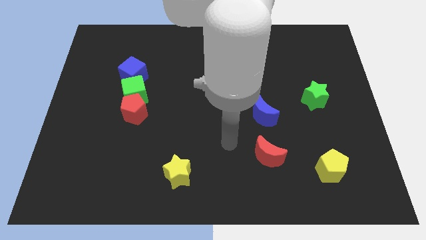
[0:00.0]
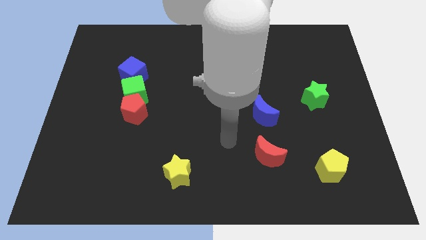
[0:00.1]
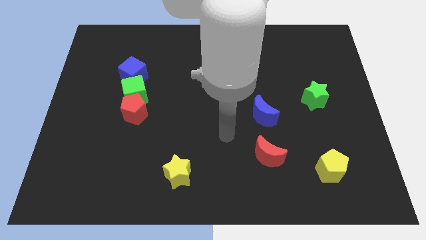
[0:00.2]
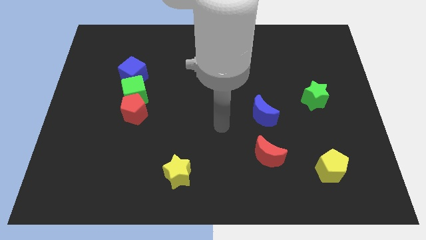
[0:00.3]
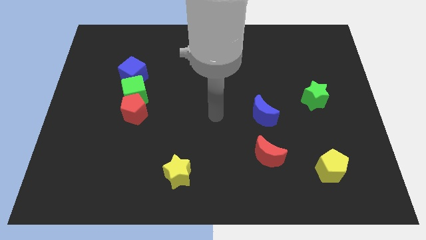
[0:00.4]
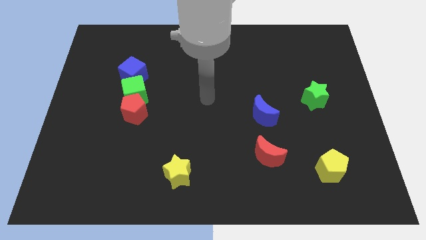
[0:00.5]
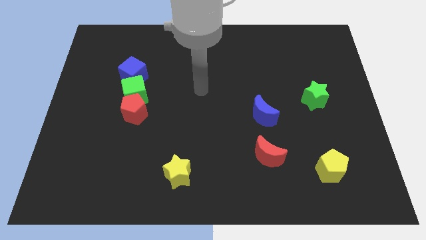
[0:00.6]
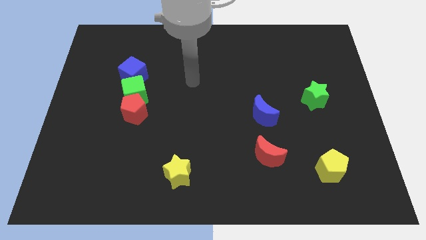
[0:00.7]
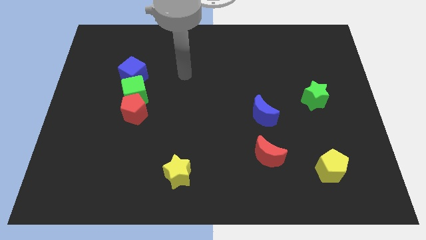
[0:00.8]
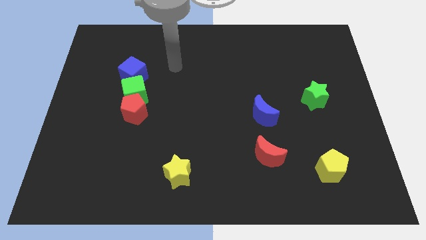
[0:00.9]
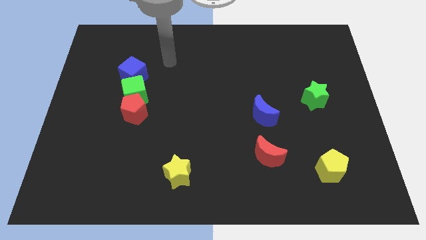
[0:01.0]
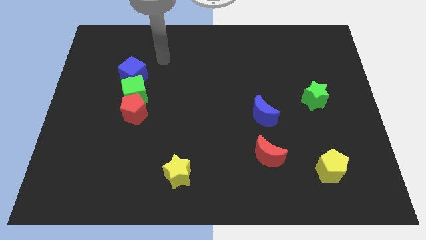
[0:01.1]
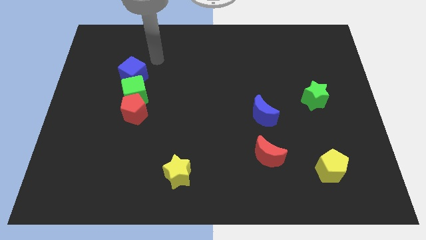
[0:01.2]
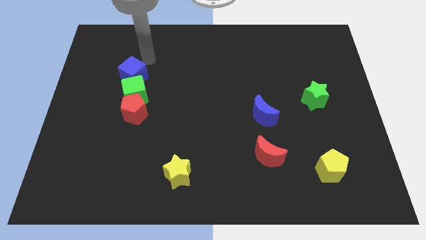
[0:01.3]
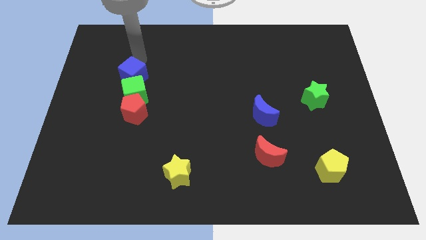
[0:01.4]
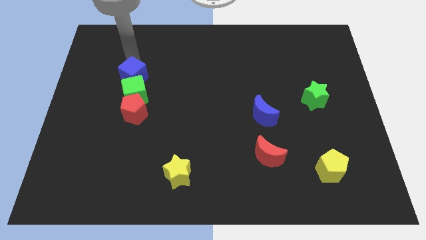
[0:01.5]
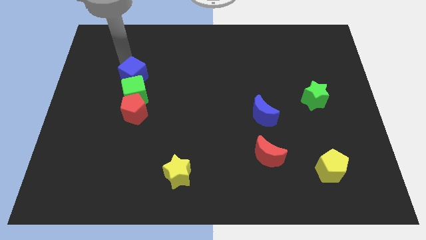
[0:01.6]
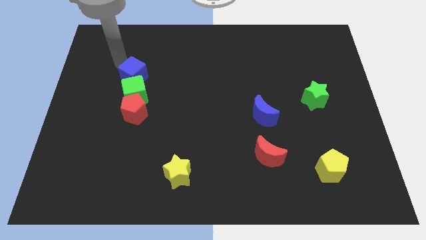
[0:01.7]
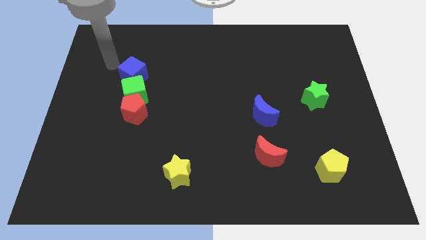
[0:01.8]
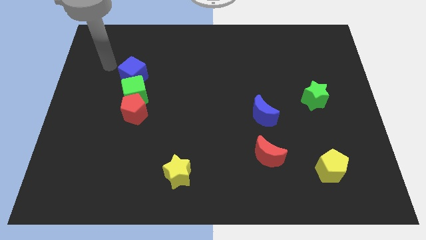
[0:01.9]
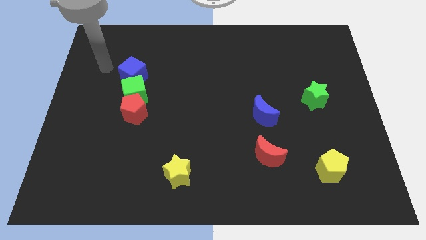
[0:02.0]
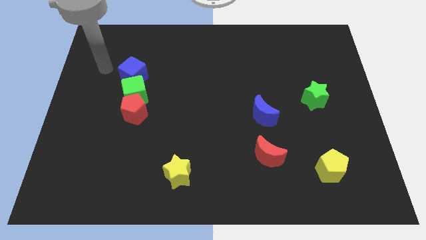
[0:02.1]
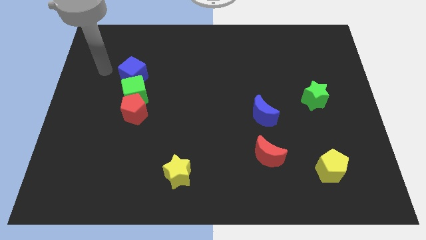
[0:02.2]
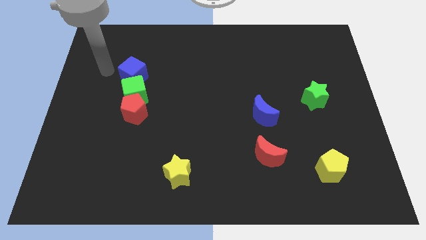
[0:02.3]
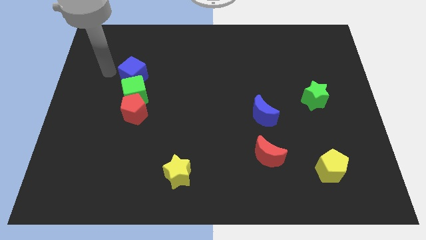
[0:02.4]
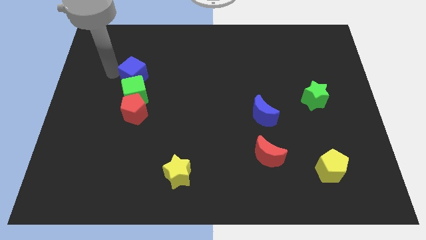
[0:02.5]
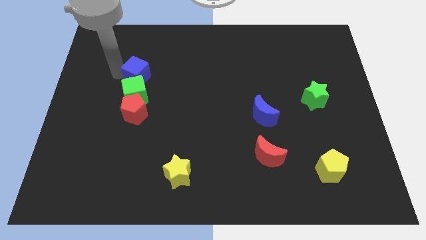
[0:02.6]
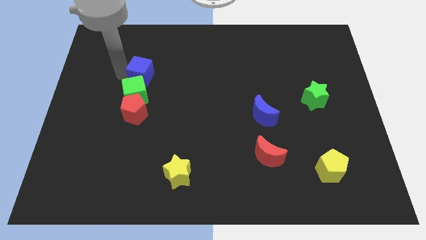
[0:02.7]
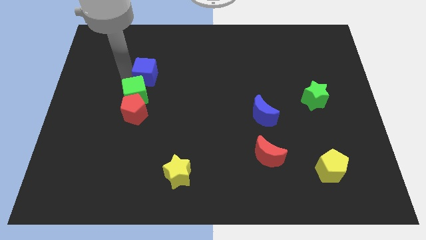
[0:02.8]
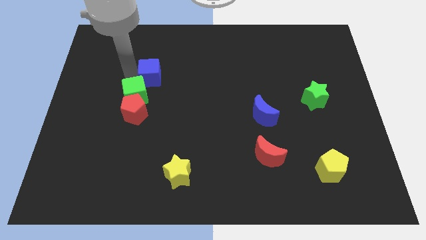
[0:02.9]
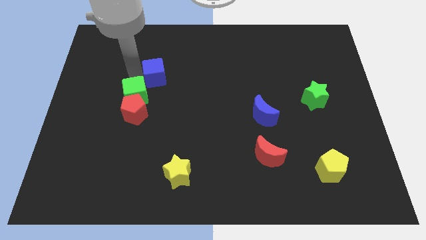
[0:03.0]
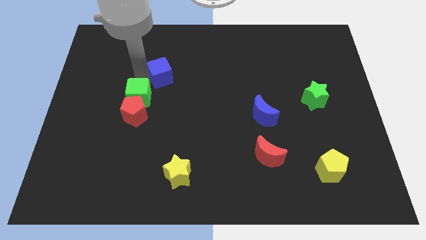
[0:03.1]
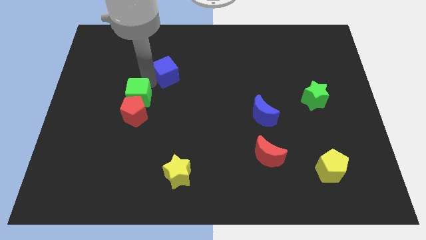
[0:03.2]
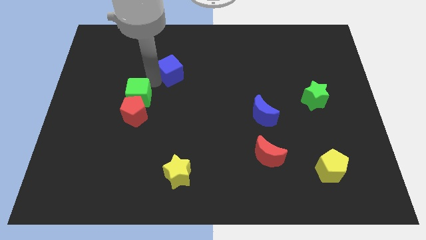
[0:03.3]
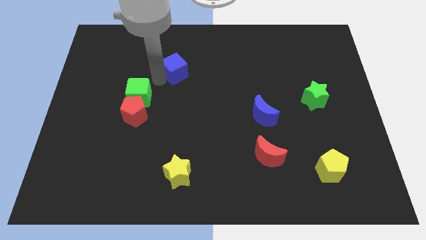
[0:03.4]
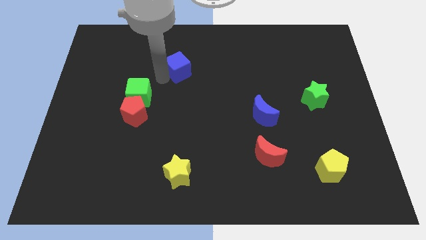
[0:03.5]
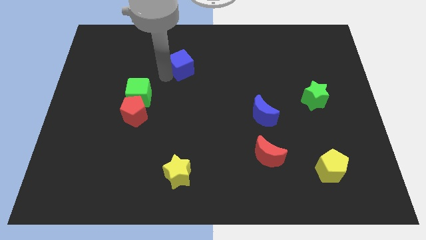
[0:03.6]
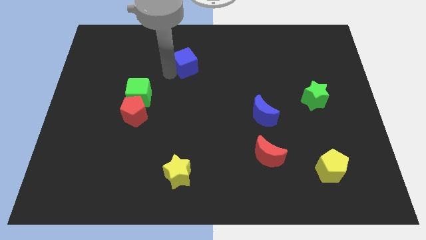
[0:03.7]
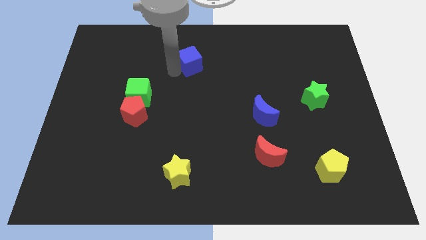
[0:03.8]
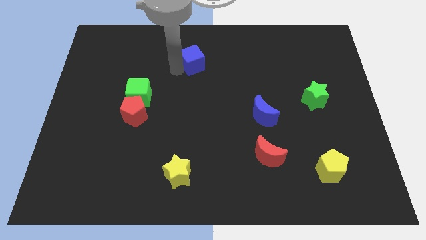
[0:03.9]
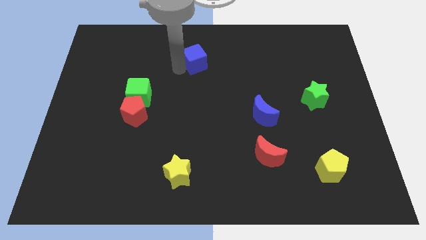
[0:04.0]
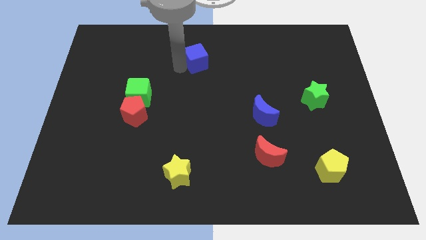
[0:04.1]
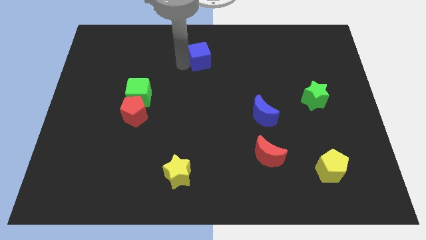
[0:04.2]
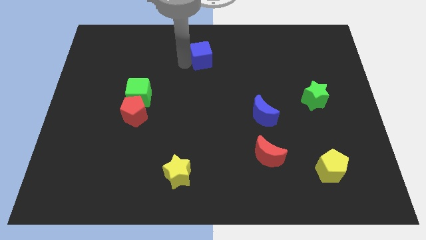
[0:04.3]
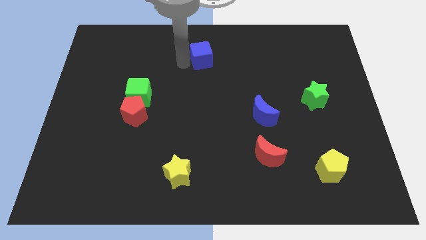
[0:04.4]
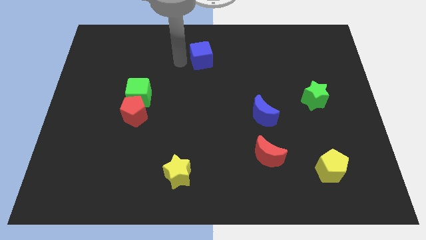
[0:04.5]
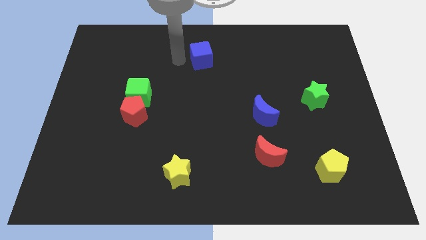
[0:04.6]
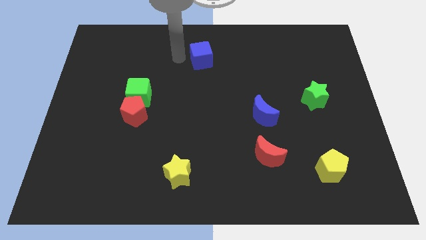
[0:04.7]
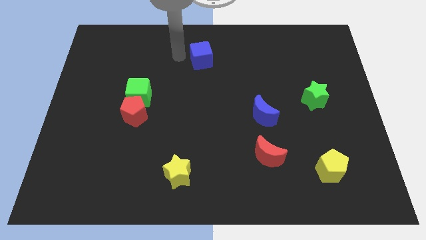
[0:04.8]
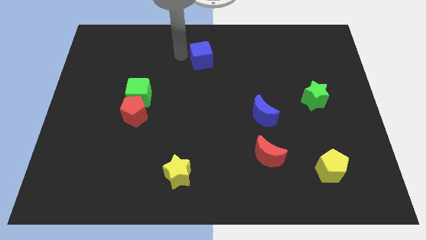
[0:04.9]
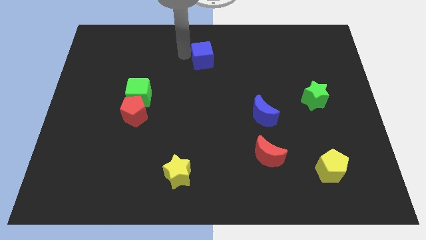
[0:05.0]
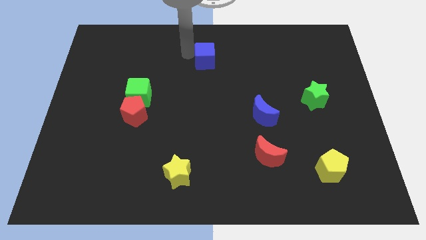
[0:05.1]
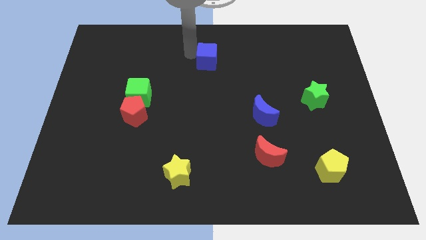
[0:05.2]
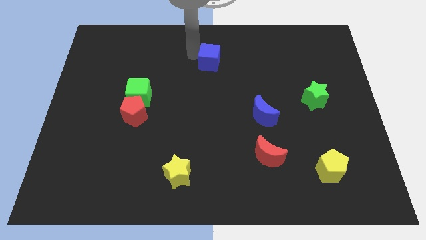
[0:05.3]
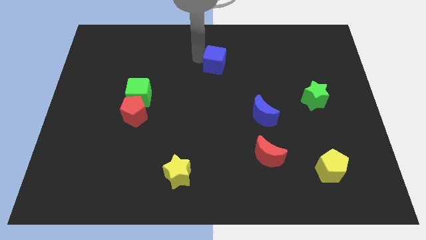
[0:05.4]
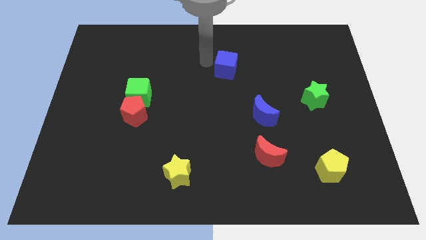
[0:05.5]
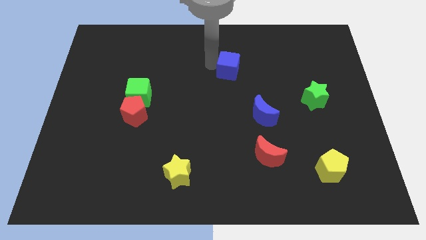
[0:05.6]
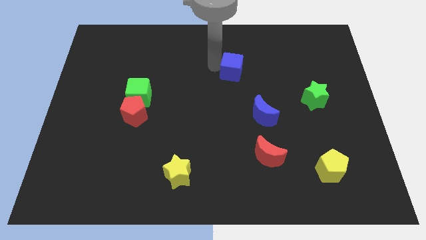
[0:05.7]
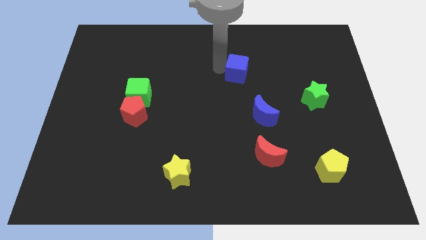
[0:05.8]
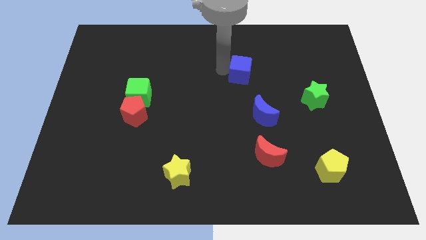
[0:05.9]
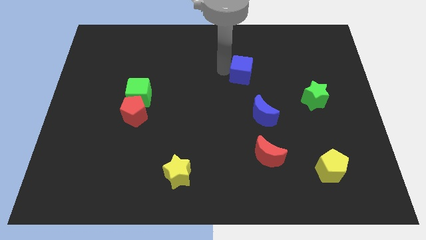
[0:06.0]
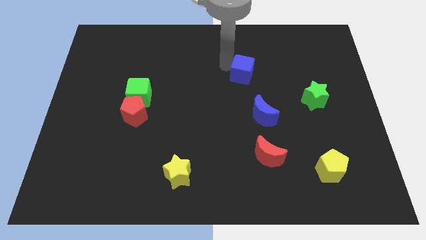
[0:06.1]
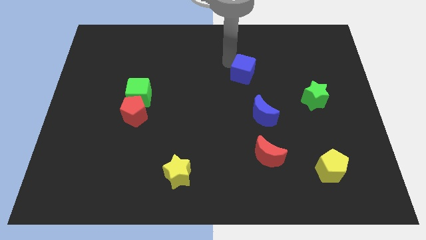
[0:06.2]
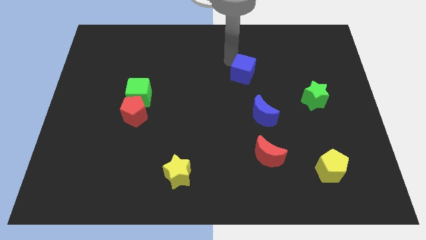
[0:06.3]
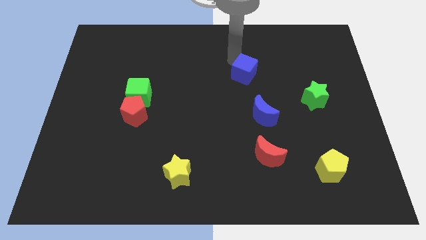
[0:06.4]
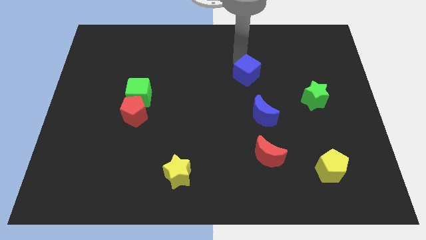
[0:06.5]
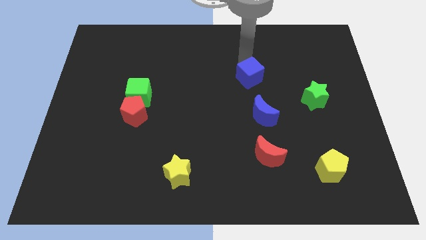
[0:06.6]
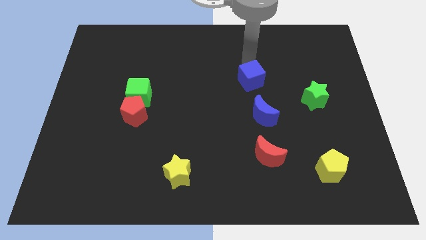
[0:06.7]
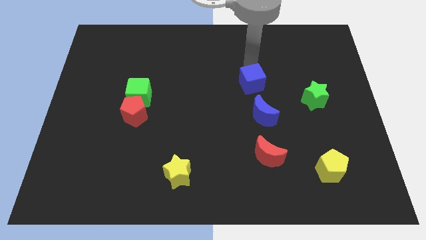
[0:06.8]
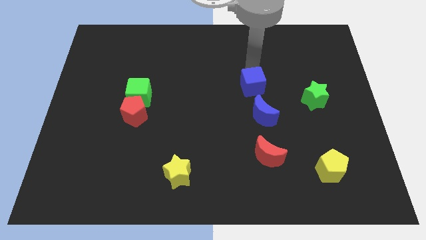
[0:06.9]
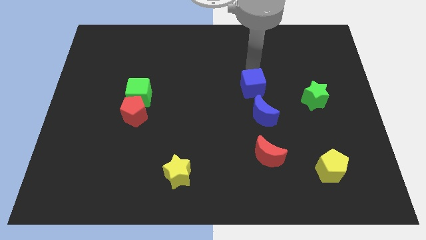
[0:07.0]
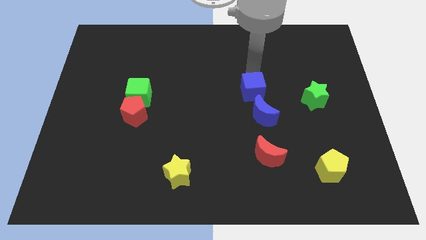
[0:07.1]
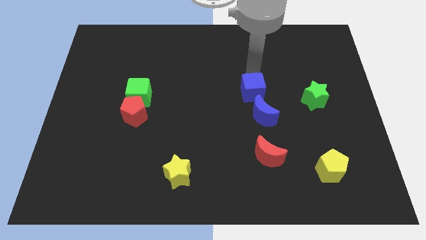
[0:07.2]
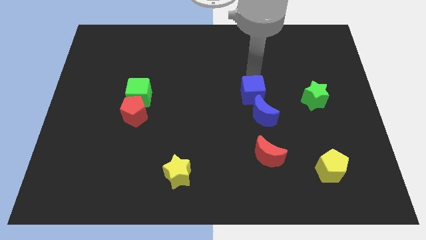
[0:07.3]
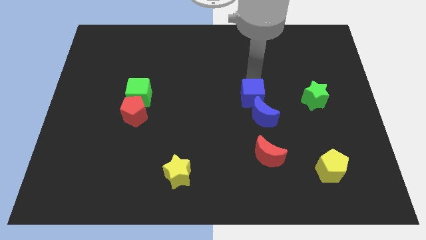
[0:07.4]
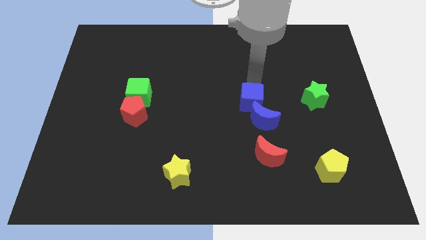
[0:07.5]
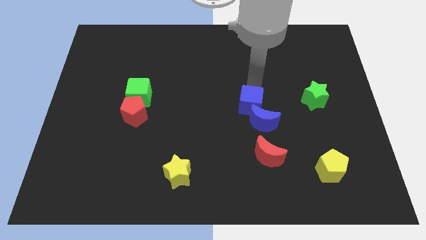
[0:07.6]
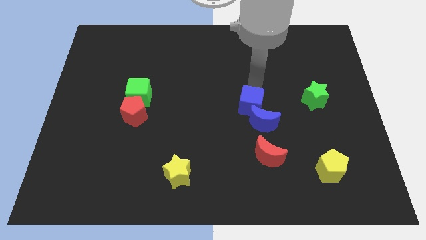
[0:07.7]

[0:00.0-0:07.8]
move the blue cube towards the blue moon

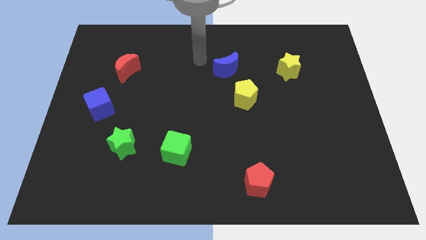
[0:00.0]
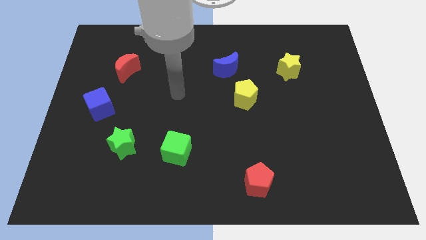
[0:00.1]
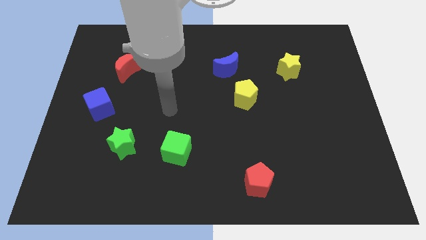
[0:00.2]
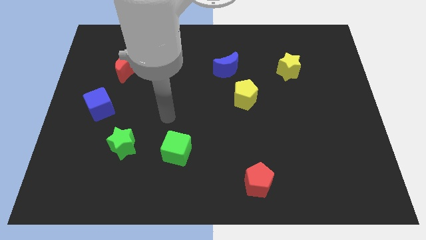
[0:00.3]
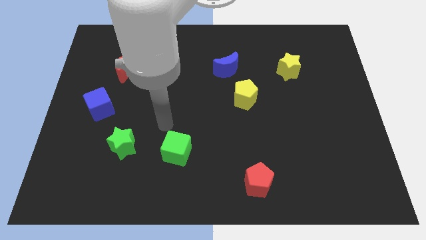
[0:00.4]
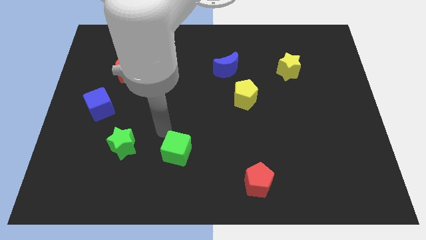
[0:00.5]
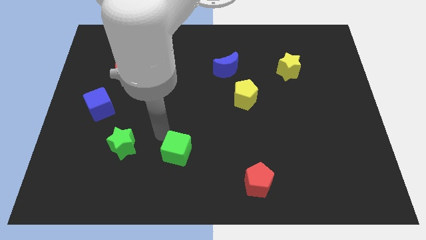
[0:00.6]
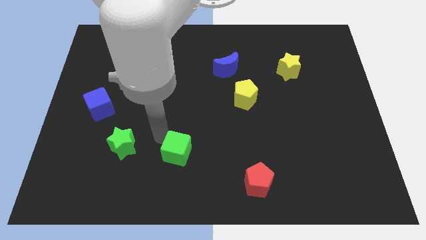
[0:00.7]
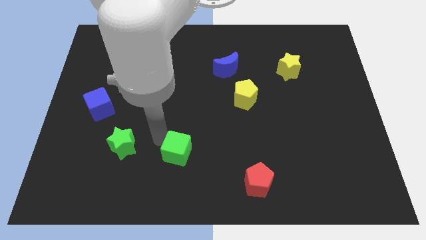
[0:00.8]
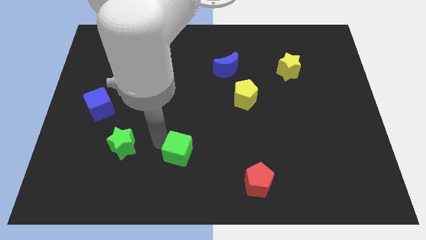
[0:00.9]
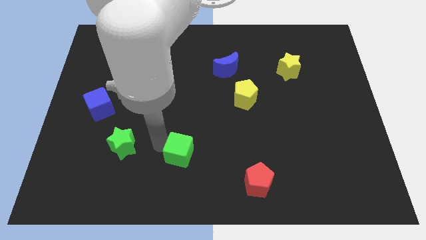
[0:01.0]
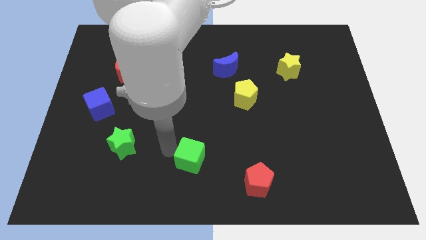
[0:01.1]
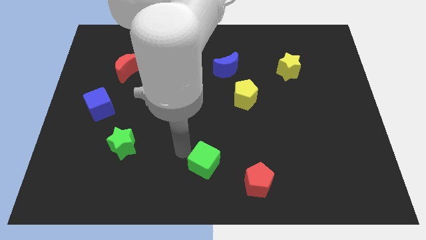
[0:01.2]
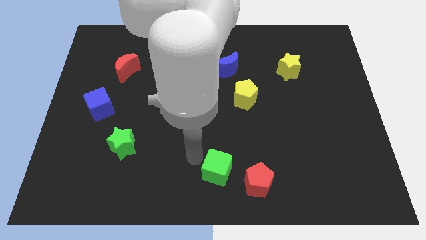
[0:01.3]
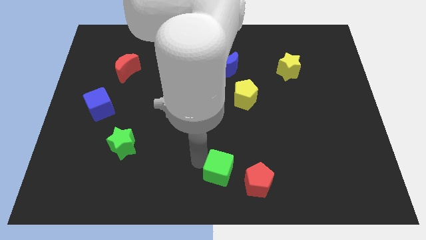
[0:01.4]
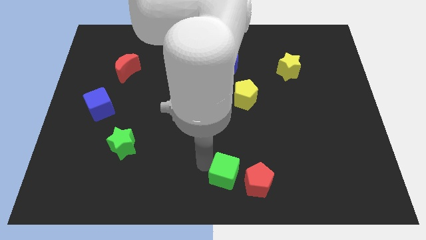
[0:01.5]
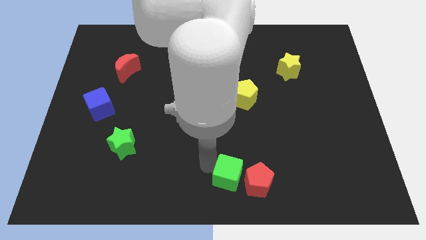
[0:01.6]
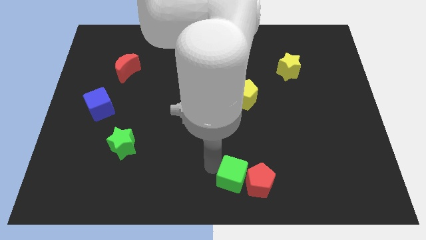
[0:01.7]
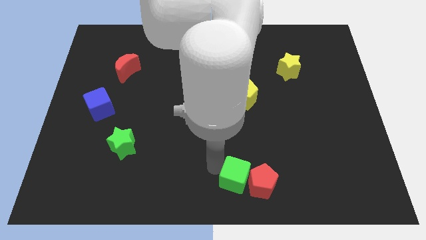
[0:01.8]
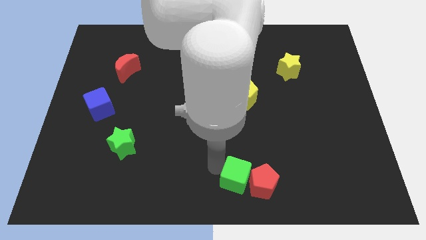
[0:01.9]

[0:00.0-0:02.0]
move the green cube towards the red pentagon
